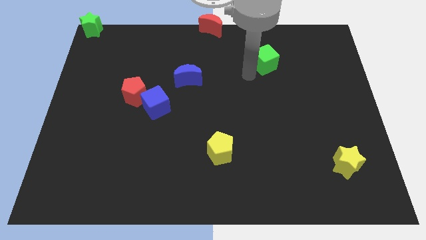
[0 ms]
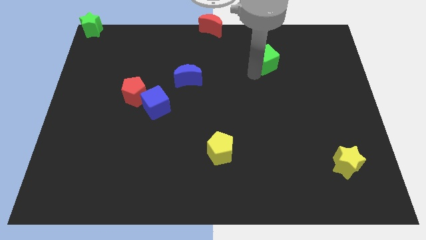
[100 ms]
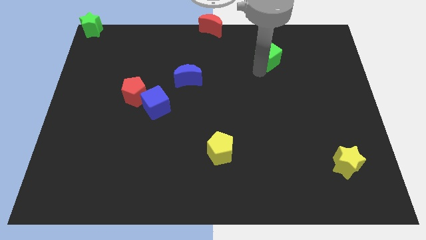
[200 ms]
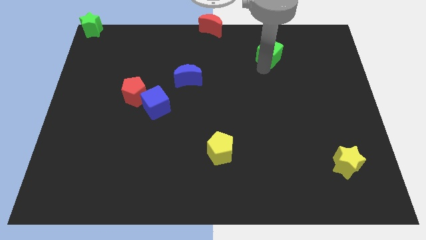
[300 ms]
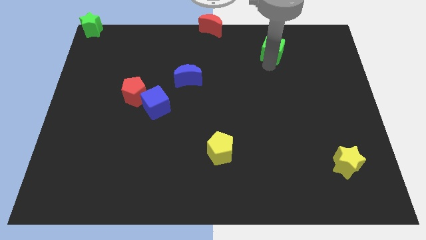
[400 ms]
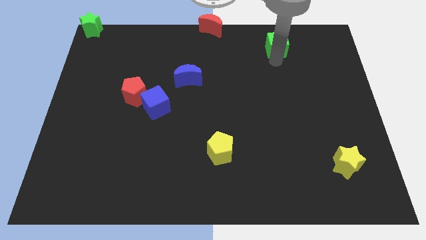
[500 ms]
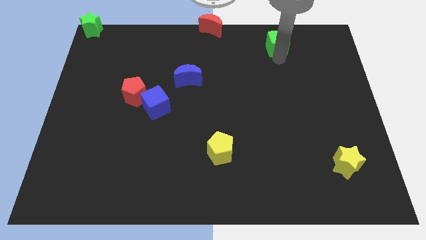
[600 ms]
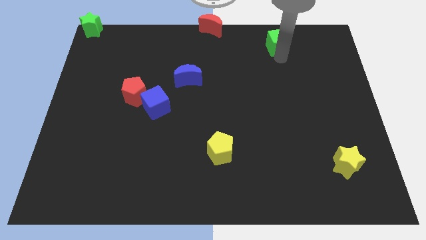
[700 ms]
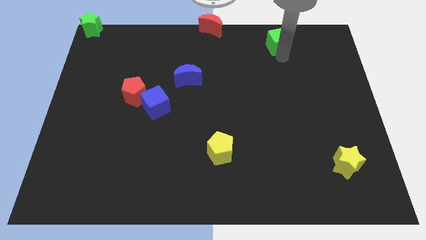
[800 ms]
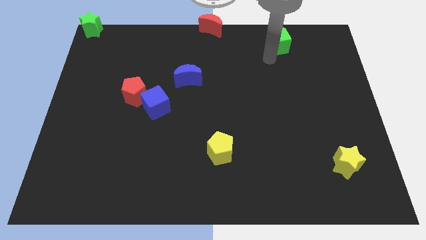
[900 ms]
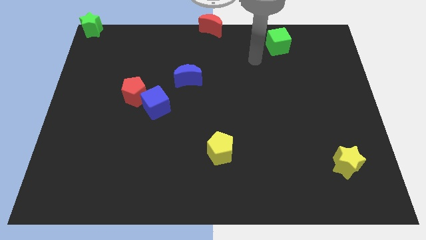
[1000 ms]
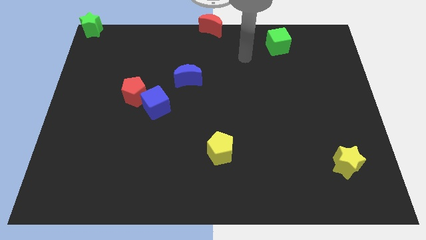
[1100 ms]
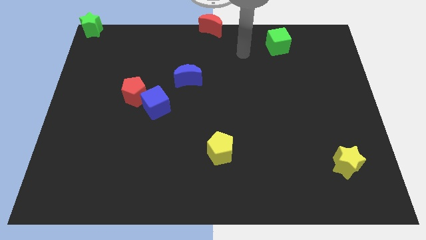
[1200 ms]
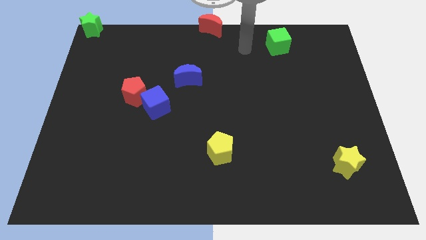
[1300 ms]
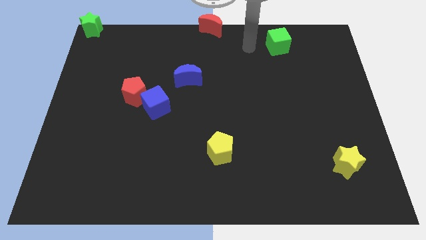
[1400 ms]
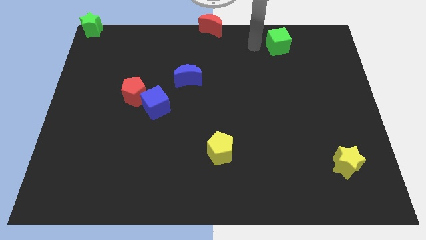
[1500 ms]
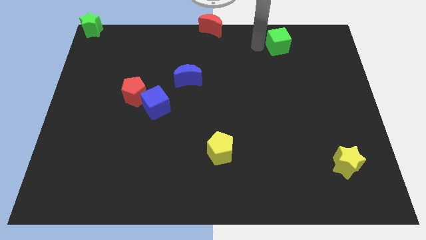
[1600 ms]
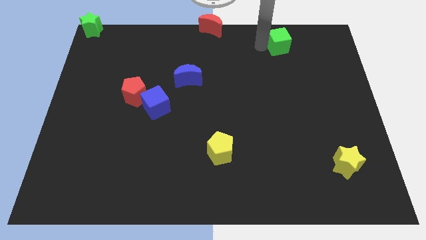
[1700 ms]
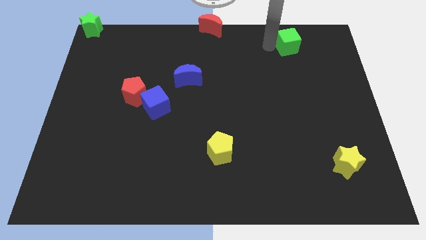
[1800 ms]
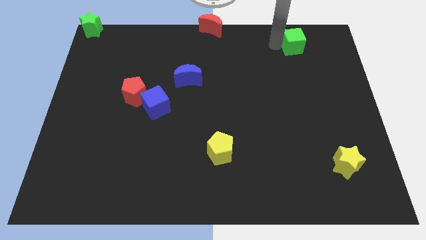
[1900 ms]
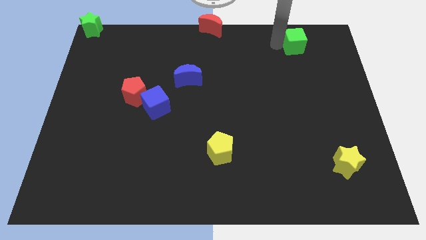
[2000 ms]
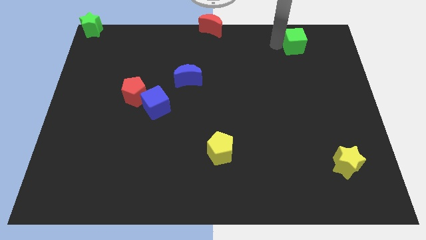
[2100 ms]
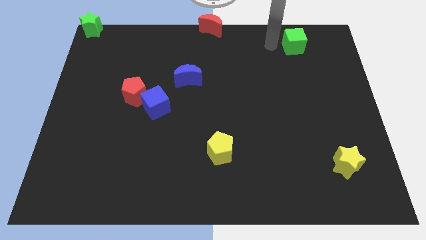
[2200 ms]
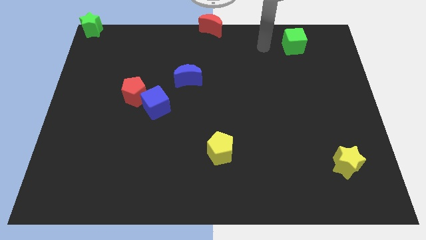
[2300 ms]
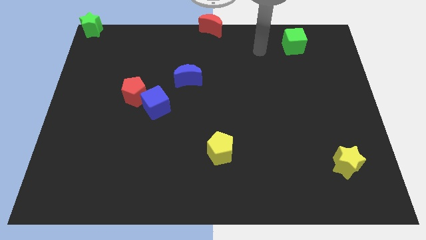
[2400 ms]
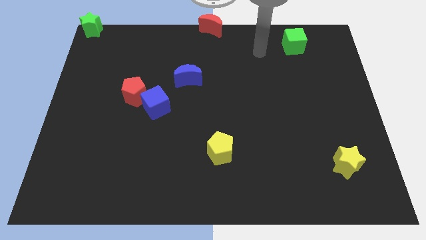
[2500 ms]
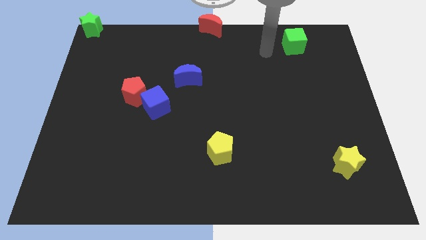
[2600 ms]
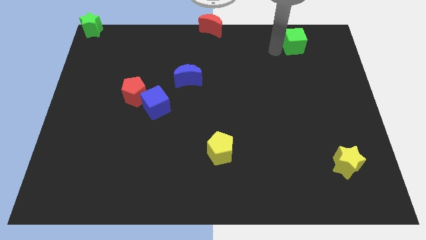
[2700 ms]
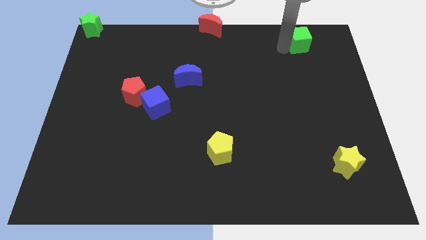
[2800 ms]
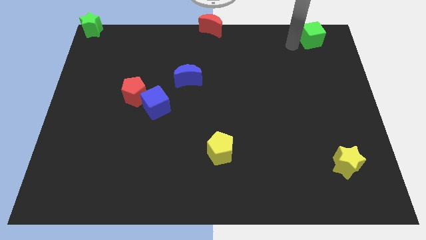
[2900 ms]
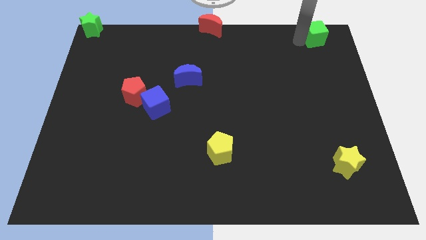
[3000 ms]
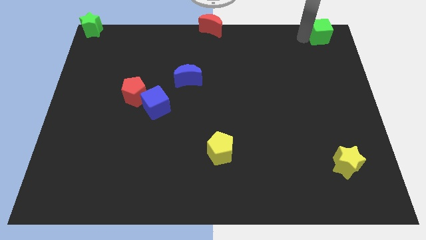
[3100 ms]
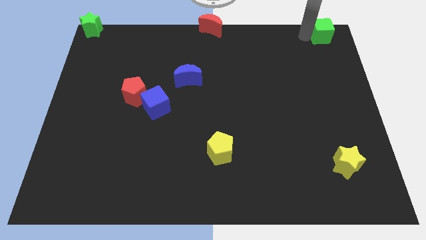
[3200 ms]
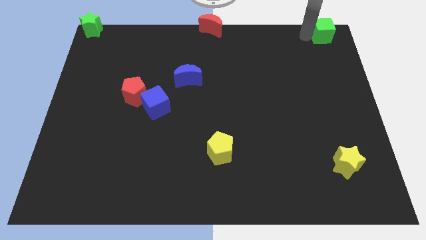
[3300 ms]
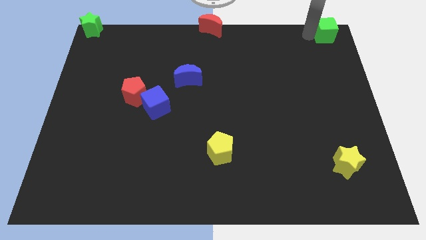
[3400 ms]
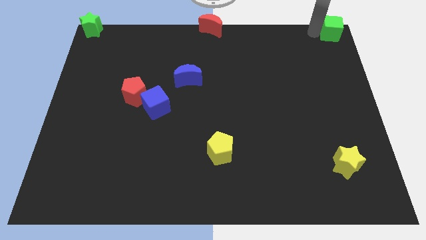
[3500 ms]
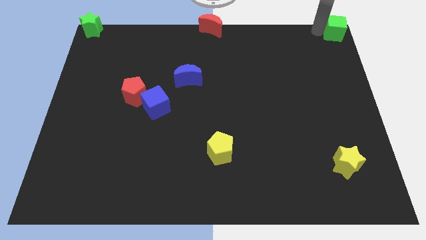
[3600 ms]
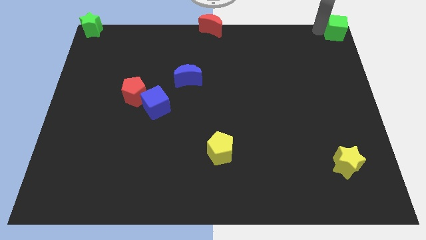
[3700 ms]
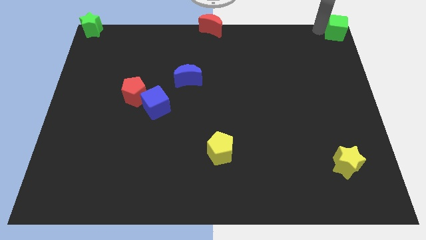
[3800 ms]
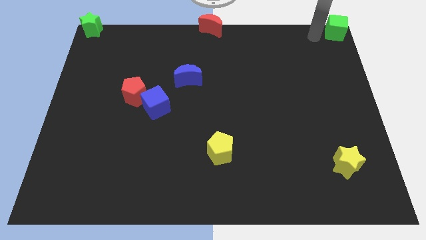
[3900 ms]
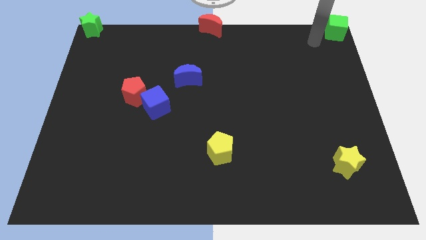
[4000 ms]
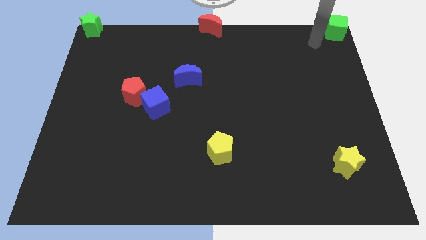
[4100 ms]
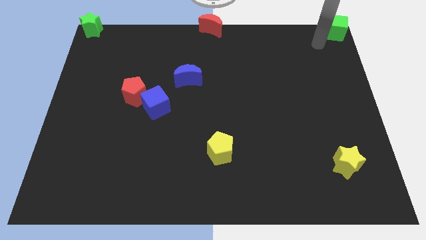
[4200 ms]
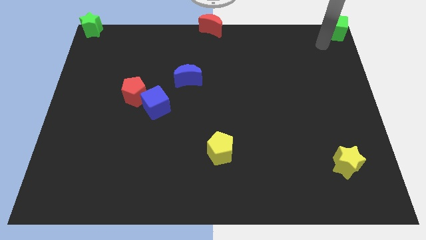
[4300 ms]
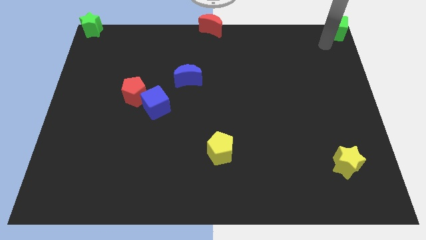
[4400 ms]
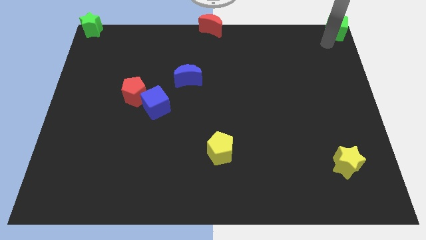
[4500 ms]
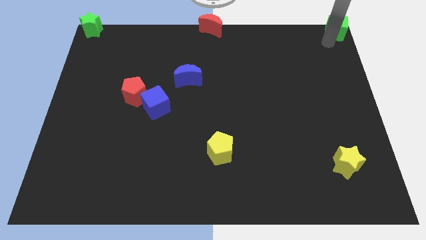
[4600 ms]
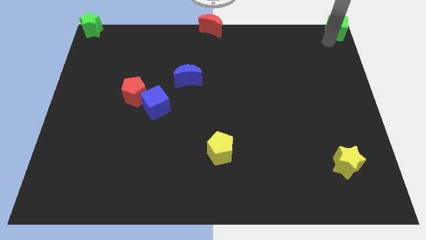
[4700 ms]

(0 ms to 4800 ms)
move the green cube to the top right corner of the board

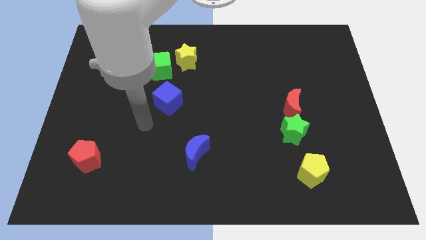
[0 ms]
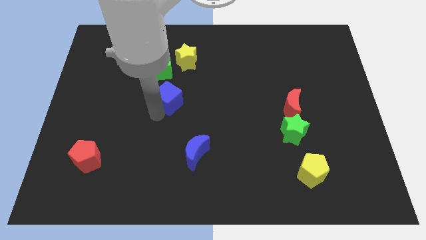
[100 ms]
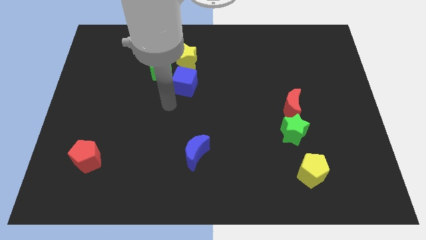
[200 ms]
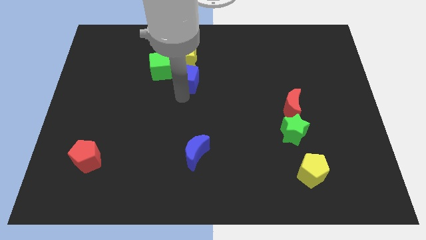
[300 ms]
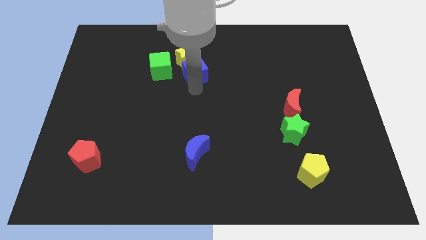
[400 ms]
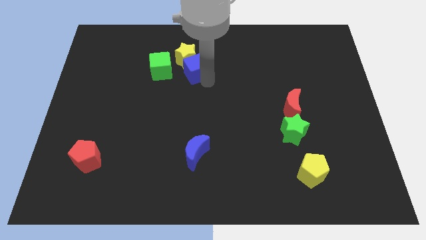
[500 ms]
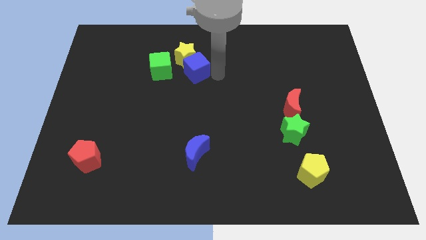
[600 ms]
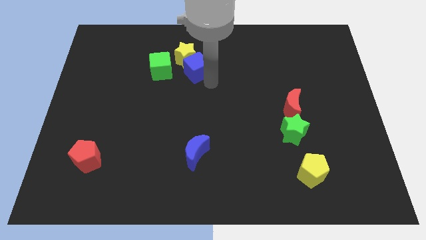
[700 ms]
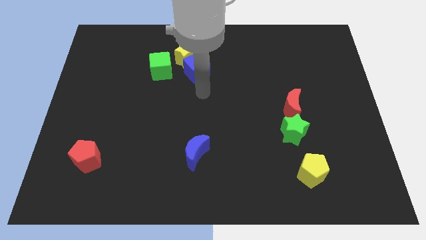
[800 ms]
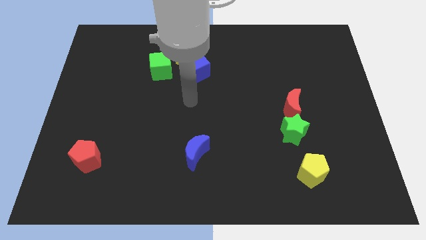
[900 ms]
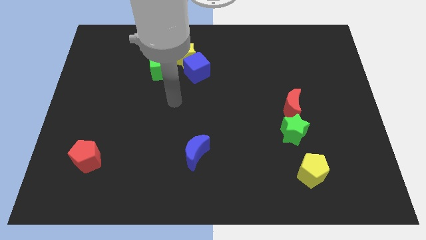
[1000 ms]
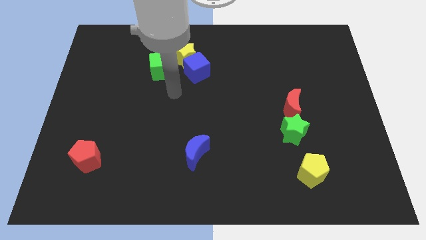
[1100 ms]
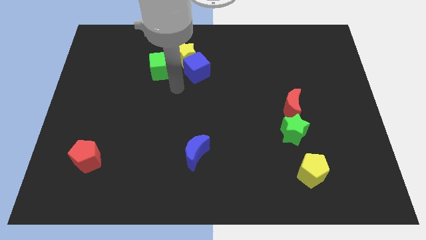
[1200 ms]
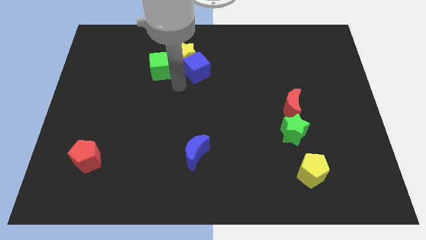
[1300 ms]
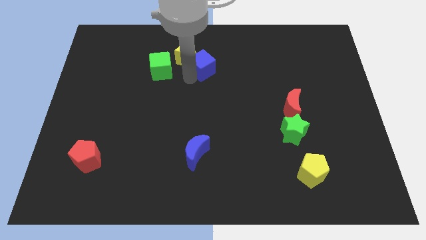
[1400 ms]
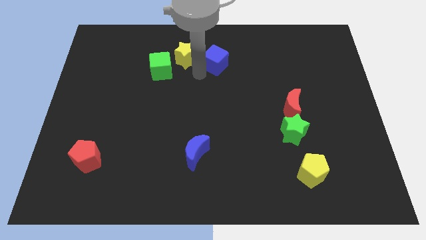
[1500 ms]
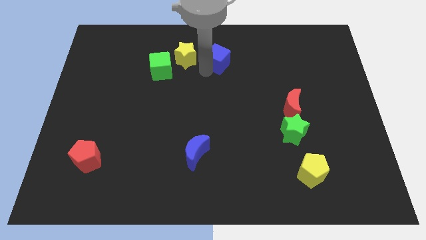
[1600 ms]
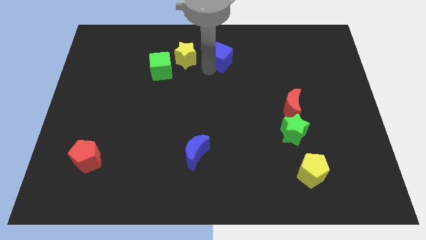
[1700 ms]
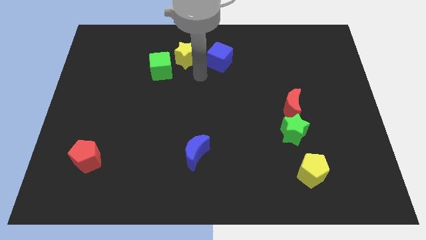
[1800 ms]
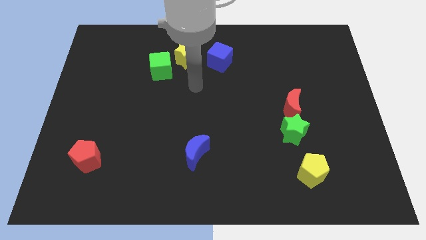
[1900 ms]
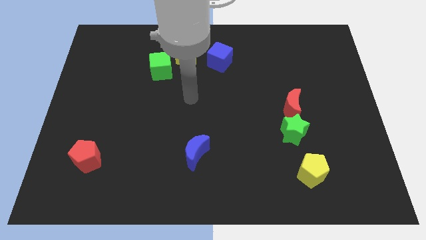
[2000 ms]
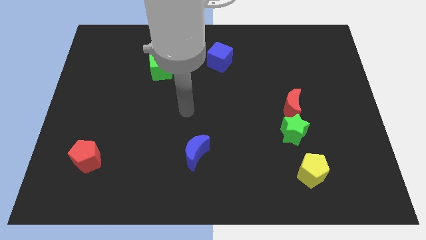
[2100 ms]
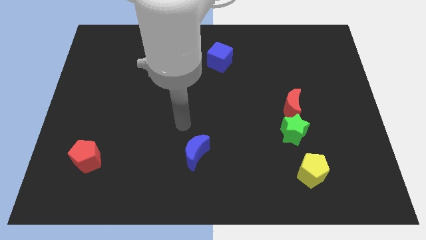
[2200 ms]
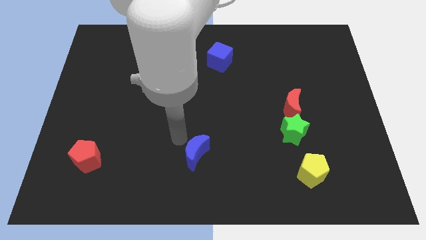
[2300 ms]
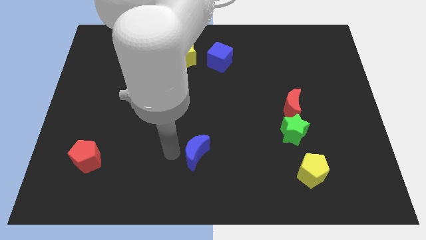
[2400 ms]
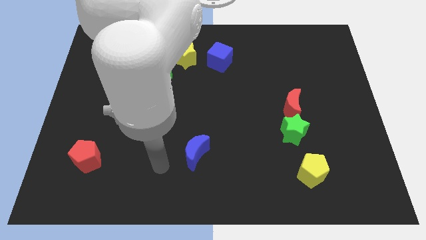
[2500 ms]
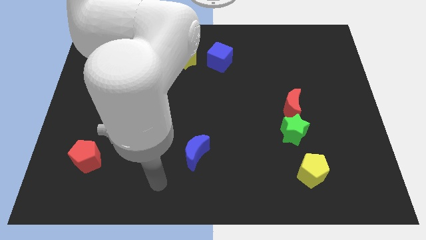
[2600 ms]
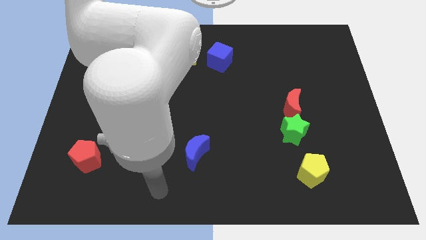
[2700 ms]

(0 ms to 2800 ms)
place the blue cube to the right of the yellow star

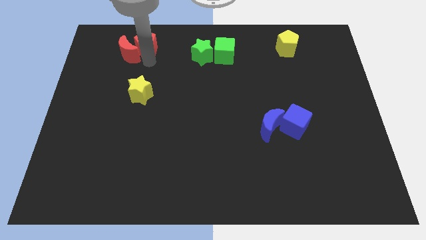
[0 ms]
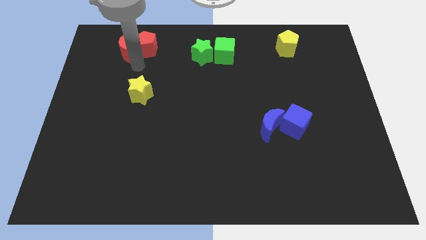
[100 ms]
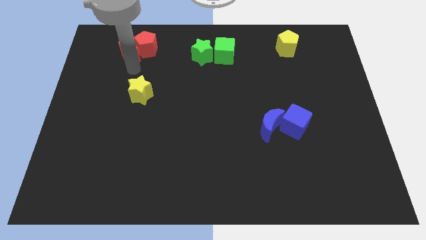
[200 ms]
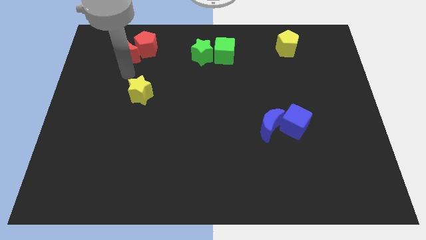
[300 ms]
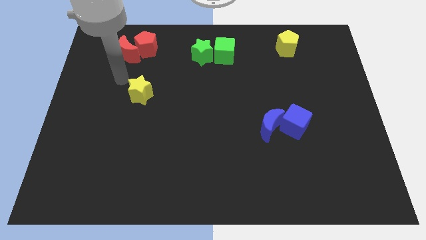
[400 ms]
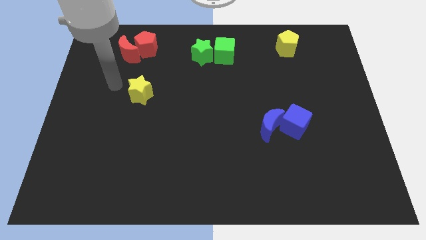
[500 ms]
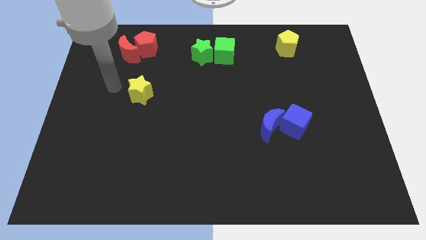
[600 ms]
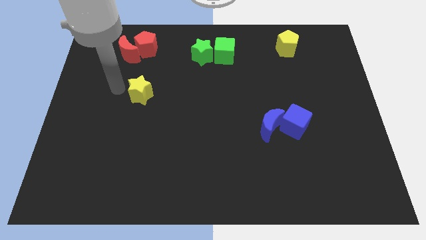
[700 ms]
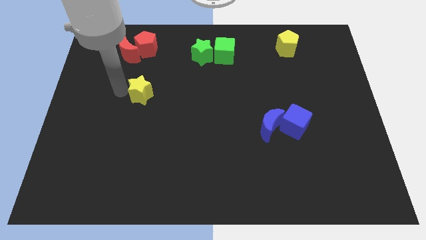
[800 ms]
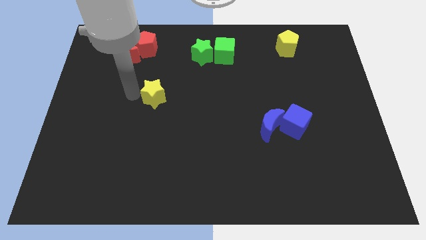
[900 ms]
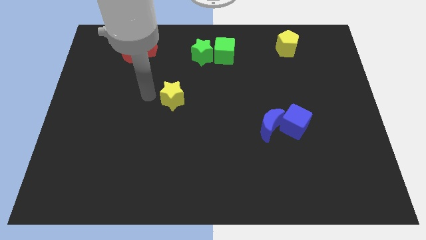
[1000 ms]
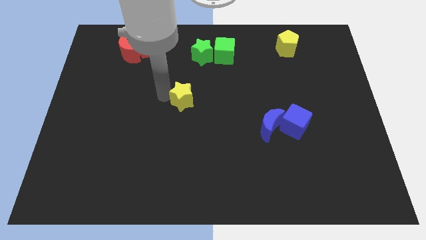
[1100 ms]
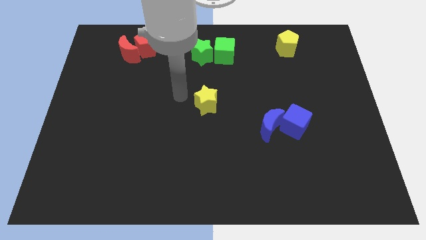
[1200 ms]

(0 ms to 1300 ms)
move the yellow star to the center of the board
